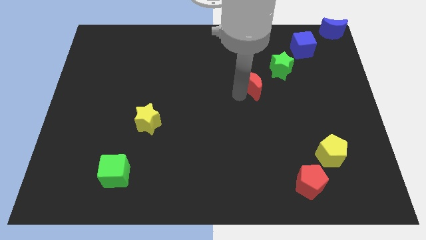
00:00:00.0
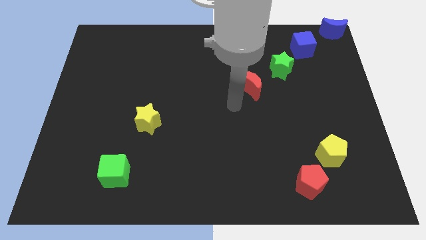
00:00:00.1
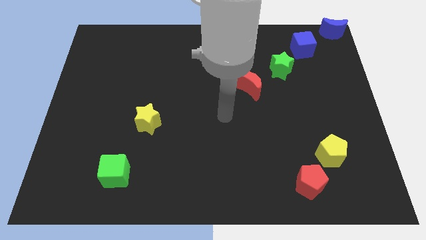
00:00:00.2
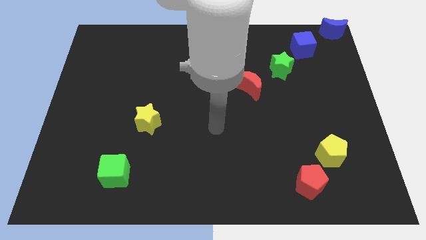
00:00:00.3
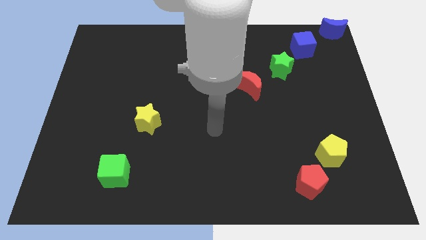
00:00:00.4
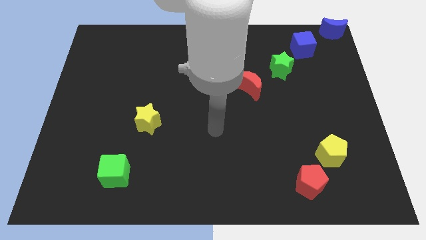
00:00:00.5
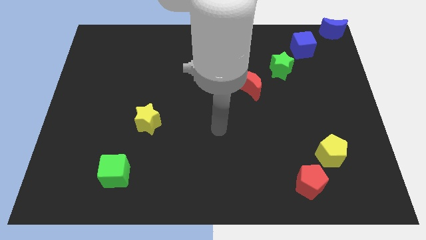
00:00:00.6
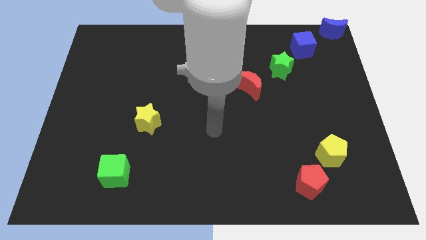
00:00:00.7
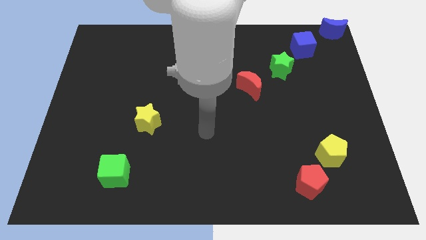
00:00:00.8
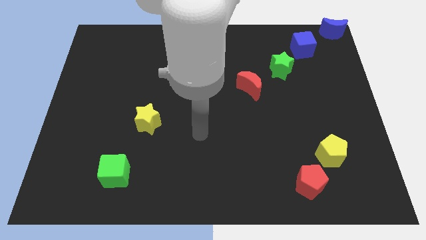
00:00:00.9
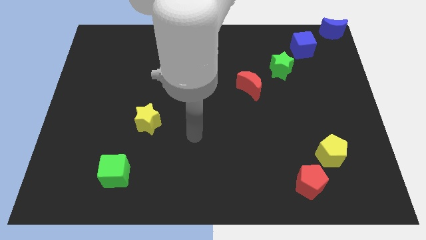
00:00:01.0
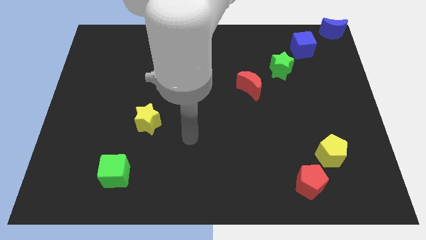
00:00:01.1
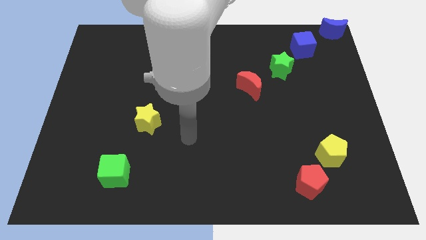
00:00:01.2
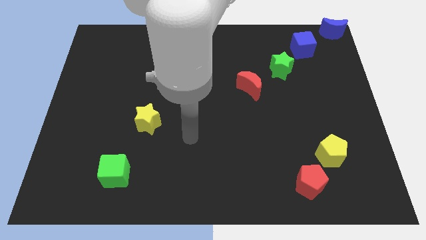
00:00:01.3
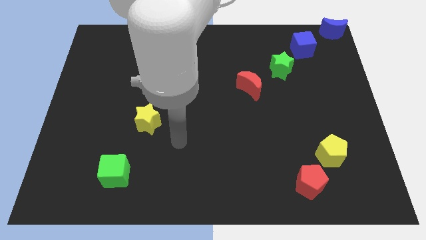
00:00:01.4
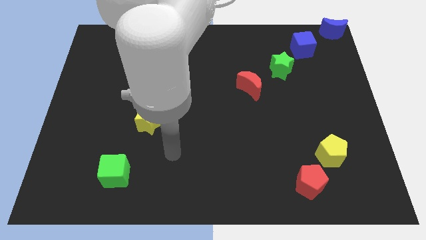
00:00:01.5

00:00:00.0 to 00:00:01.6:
move yourself away from the red moon

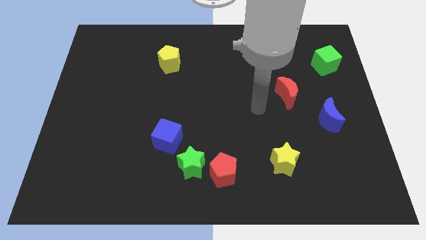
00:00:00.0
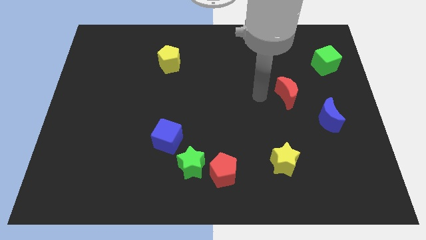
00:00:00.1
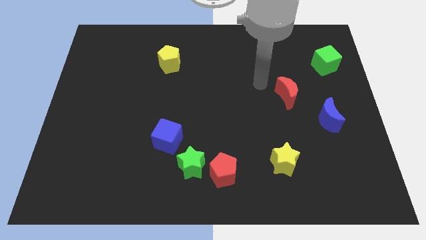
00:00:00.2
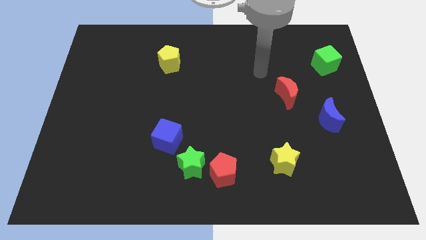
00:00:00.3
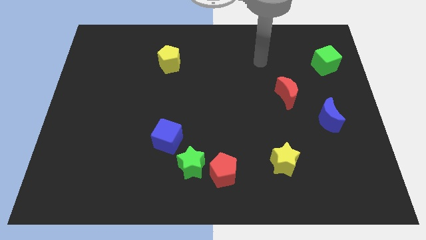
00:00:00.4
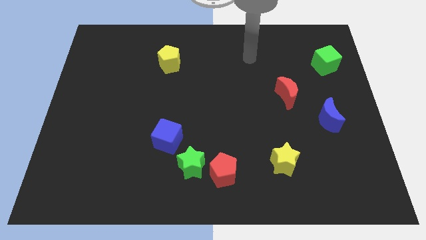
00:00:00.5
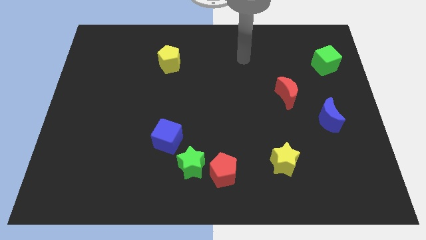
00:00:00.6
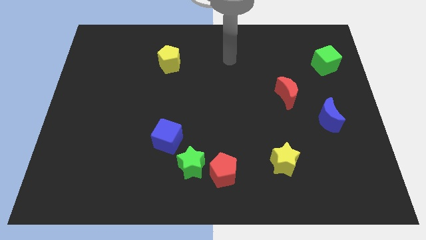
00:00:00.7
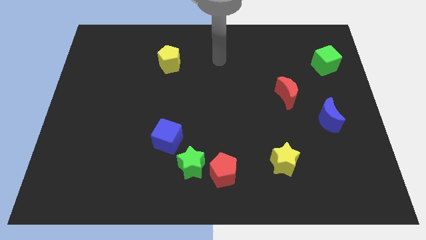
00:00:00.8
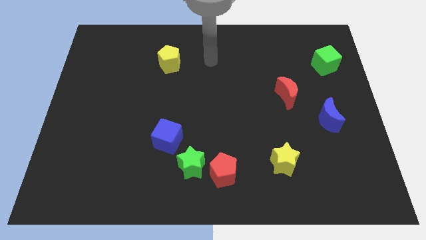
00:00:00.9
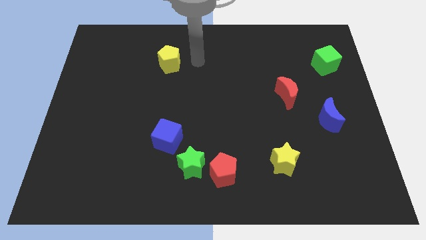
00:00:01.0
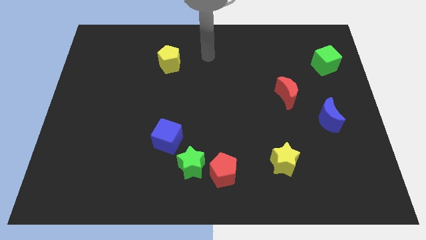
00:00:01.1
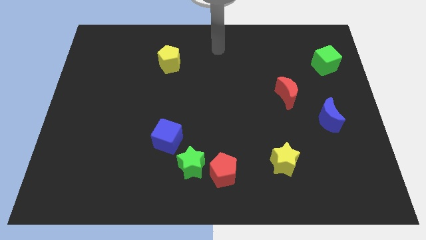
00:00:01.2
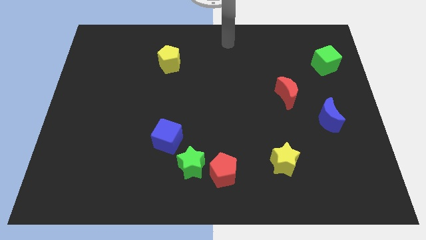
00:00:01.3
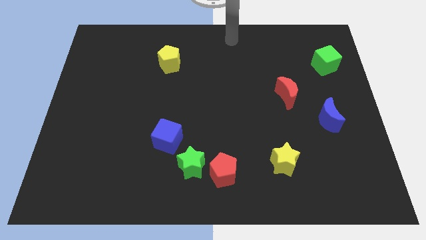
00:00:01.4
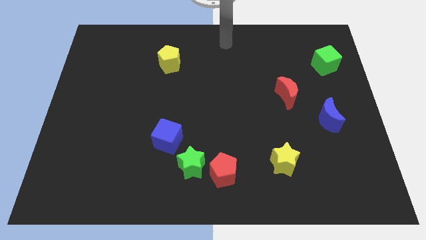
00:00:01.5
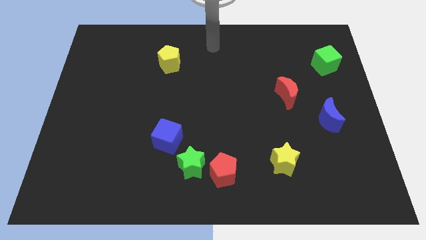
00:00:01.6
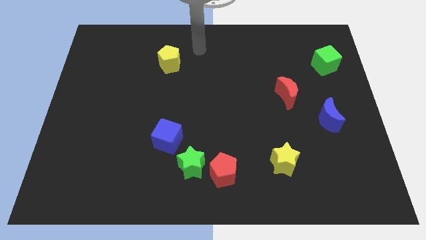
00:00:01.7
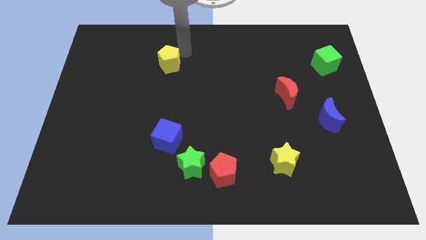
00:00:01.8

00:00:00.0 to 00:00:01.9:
move your arm and point diagonal to the yellow pentagon

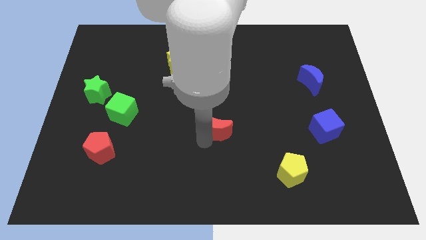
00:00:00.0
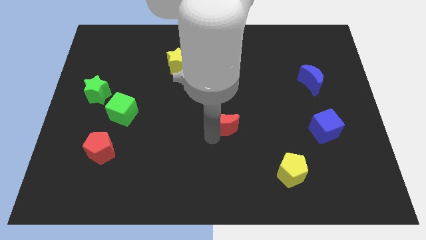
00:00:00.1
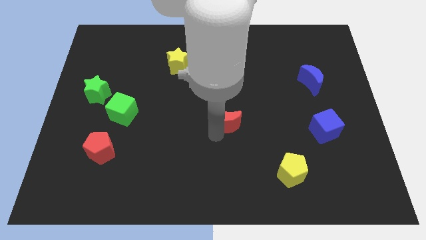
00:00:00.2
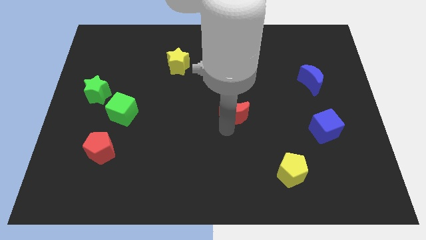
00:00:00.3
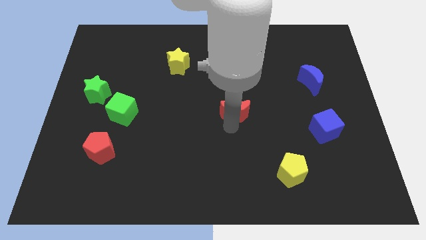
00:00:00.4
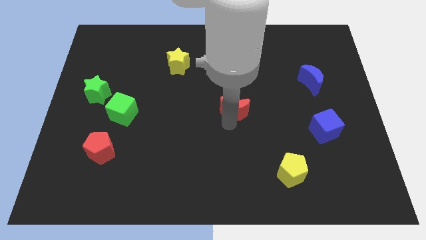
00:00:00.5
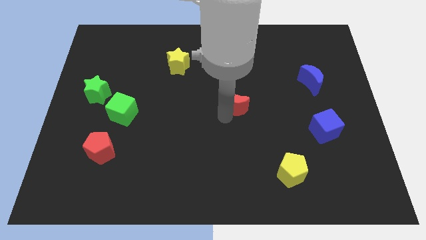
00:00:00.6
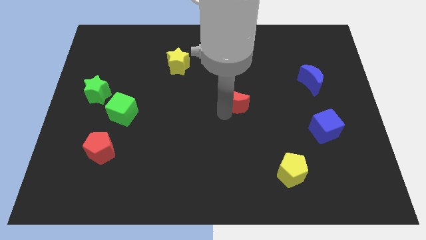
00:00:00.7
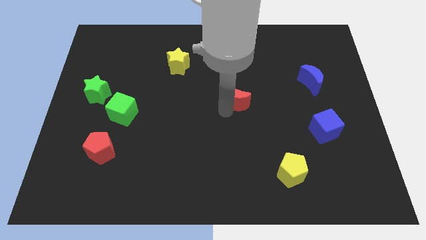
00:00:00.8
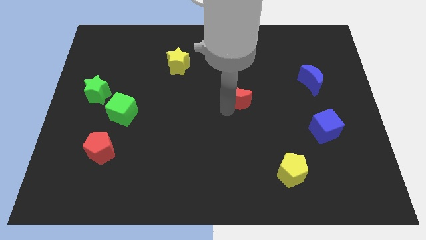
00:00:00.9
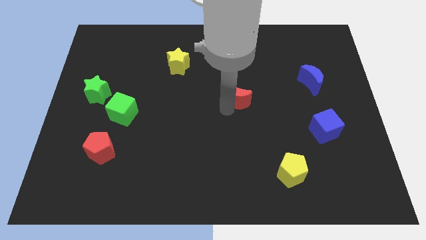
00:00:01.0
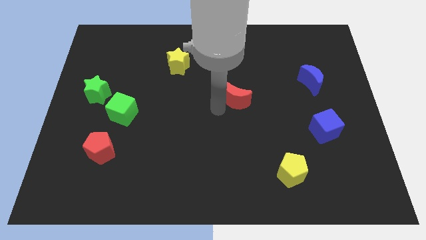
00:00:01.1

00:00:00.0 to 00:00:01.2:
place red moon in between the yellow blocks

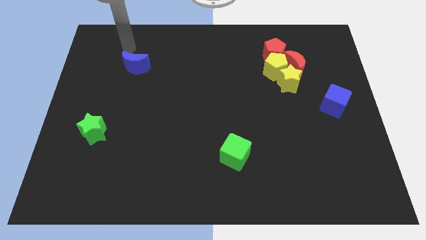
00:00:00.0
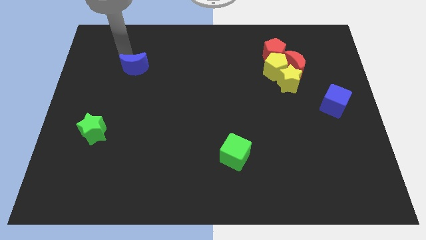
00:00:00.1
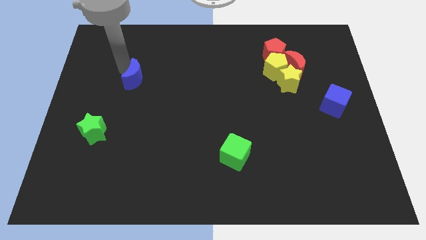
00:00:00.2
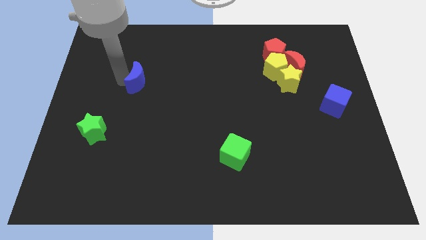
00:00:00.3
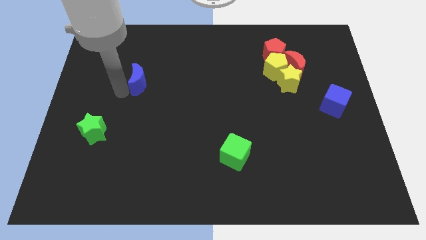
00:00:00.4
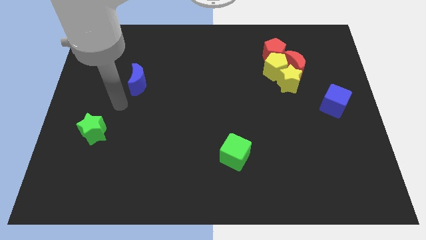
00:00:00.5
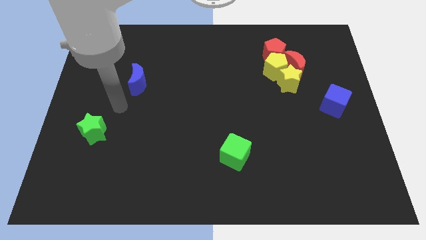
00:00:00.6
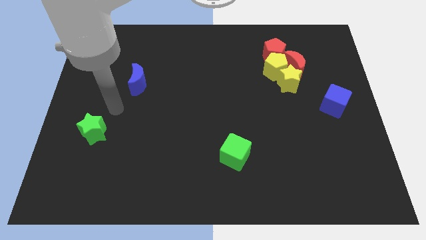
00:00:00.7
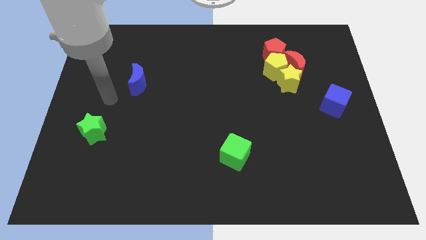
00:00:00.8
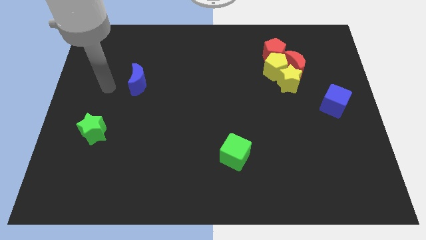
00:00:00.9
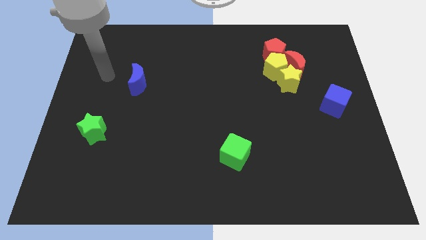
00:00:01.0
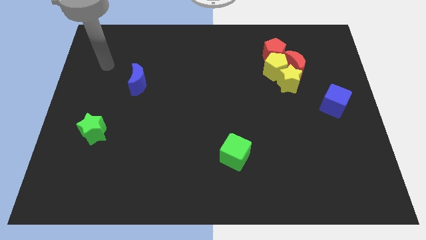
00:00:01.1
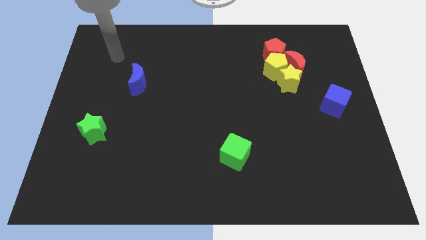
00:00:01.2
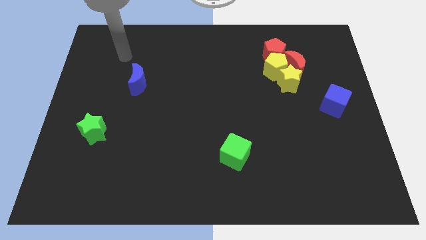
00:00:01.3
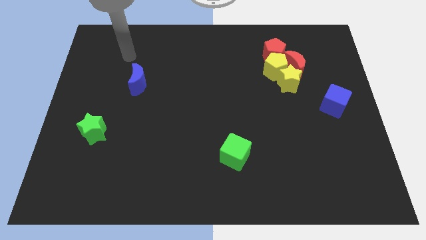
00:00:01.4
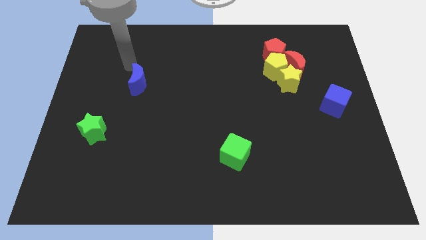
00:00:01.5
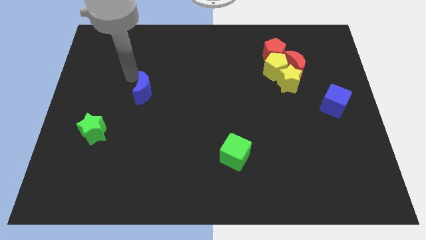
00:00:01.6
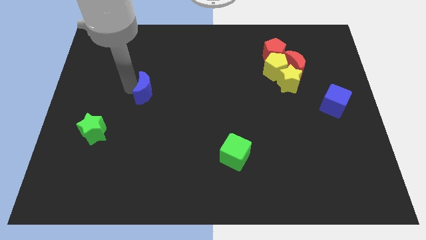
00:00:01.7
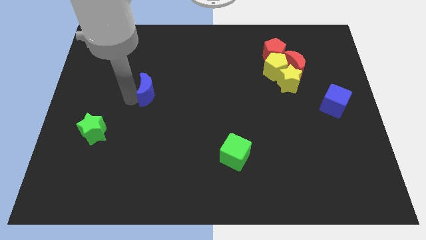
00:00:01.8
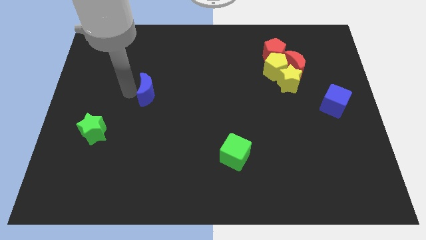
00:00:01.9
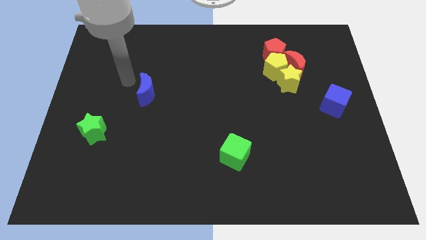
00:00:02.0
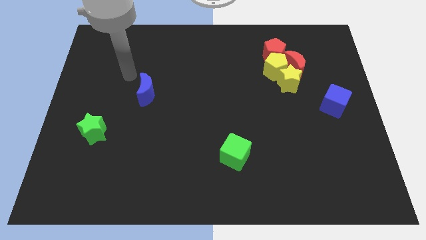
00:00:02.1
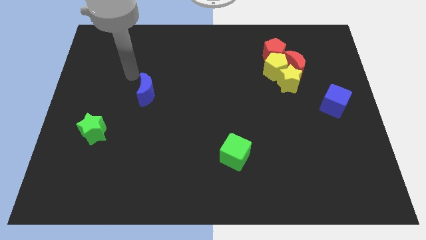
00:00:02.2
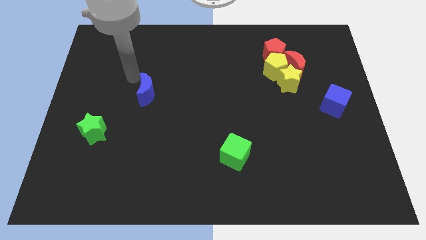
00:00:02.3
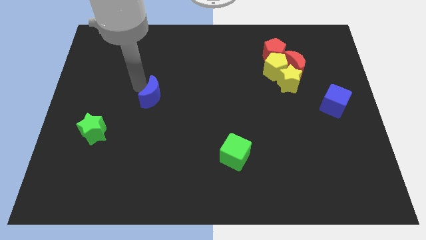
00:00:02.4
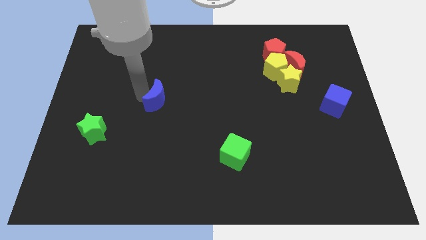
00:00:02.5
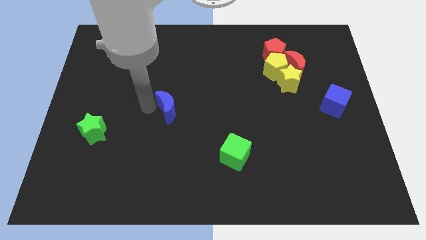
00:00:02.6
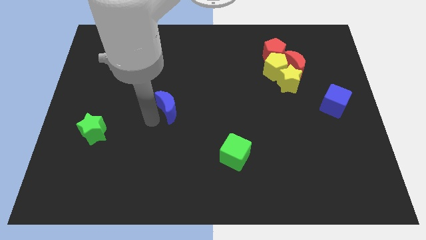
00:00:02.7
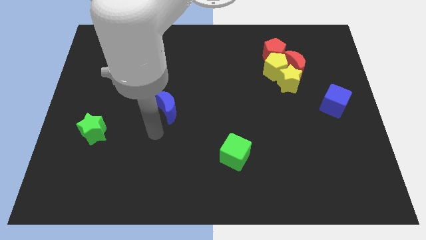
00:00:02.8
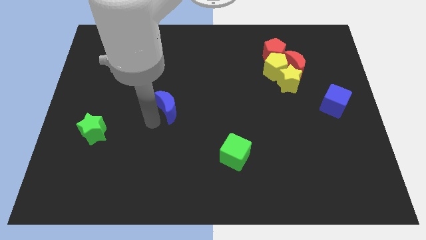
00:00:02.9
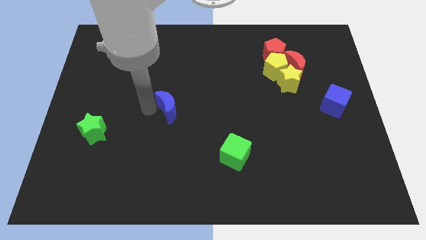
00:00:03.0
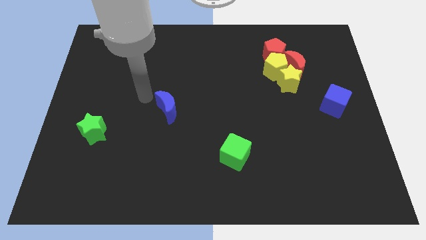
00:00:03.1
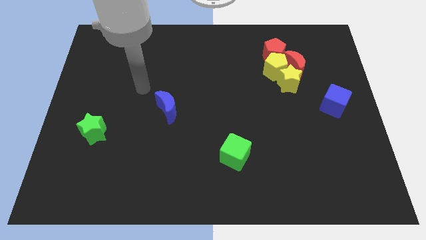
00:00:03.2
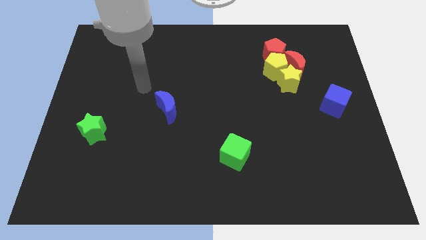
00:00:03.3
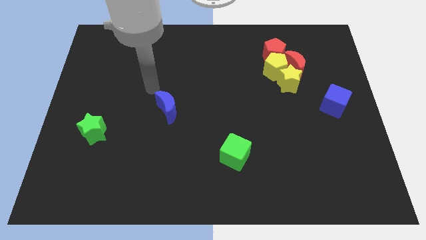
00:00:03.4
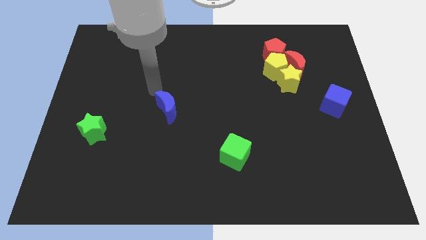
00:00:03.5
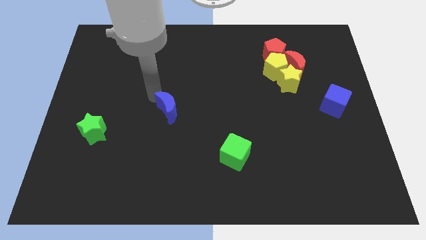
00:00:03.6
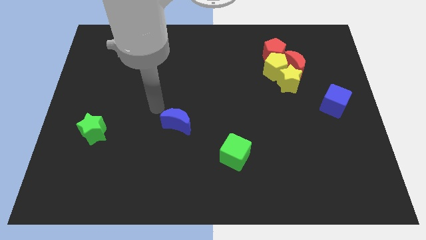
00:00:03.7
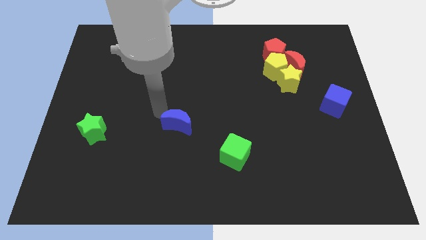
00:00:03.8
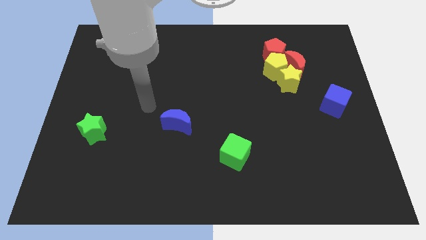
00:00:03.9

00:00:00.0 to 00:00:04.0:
move the blue crescent to the center of the board

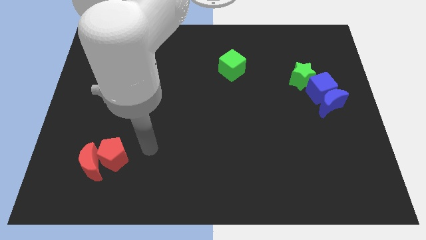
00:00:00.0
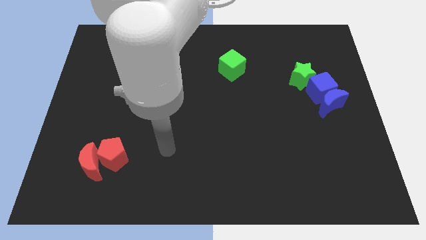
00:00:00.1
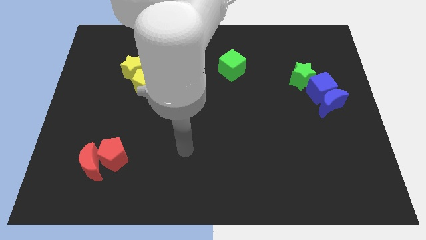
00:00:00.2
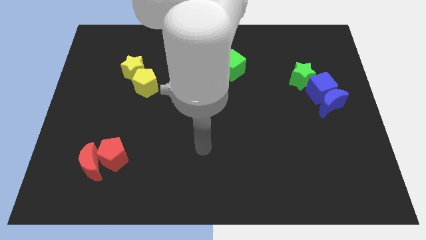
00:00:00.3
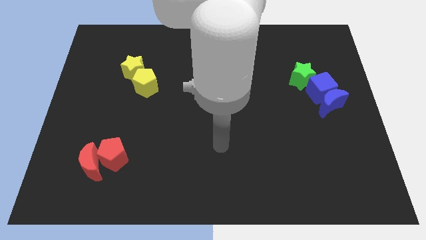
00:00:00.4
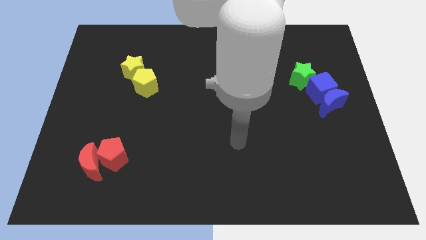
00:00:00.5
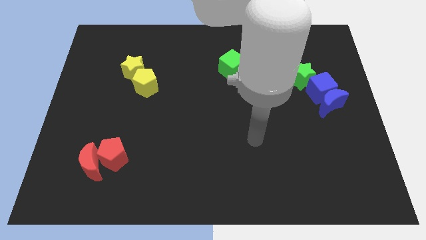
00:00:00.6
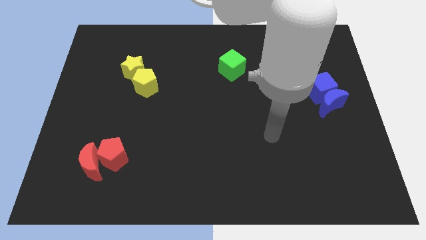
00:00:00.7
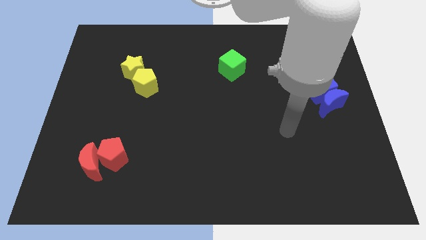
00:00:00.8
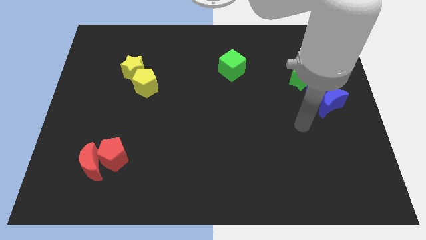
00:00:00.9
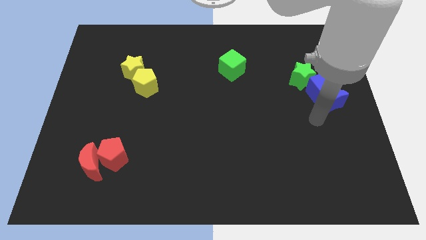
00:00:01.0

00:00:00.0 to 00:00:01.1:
move your arm towards the blue blocks
